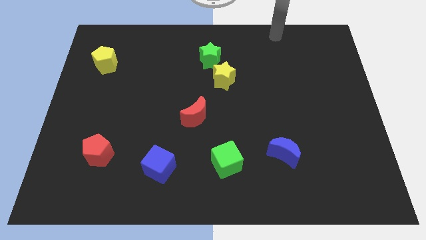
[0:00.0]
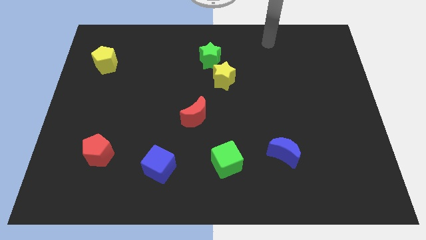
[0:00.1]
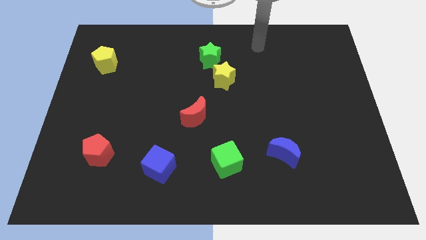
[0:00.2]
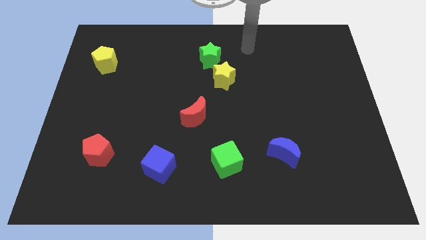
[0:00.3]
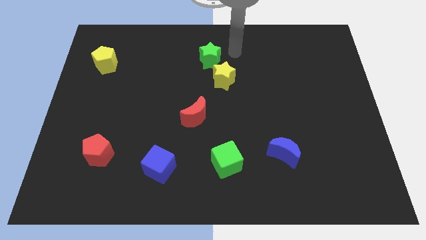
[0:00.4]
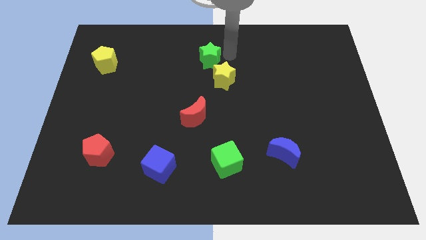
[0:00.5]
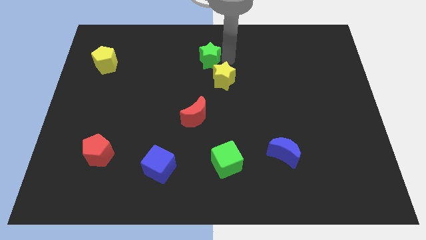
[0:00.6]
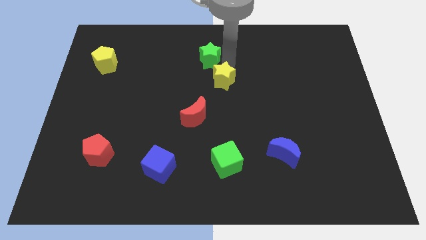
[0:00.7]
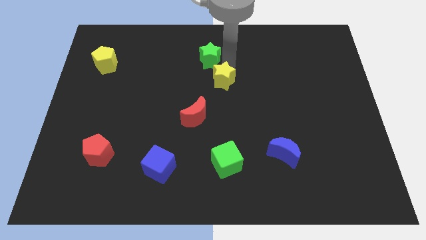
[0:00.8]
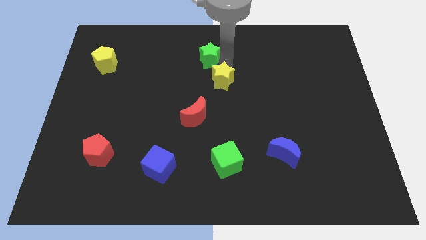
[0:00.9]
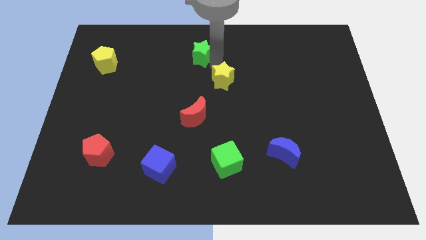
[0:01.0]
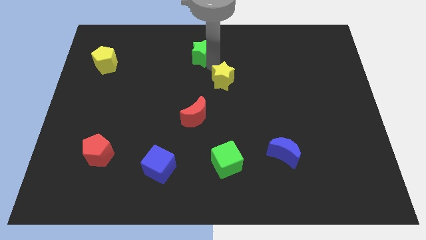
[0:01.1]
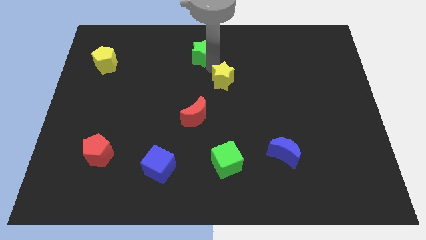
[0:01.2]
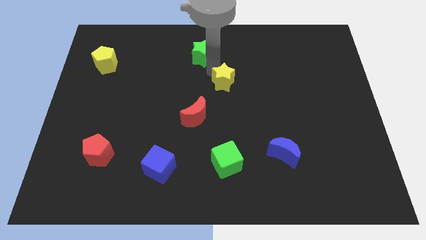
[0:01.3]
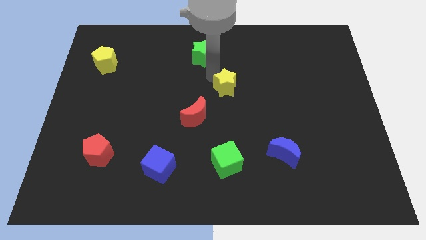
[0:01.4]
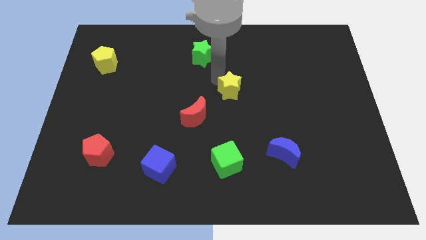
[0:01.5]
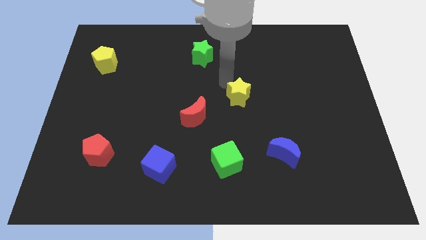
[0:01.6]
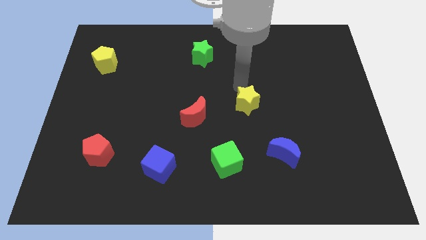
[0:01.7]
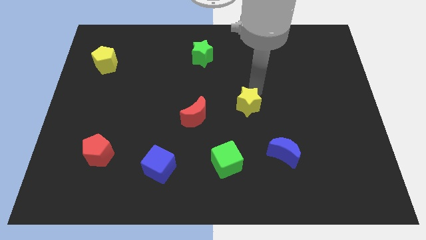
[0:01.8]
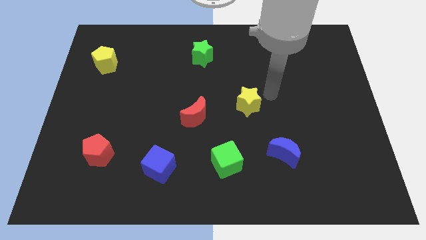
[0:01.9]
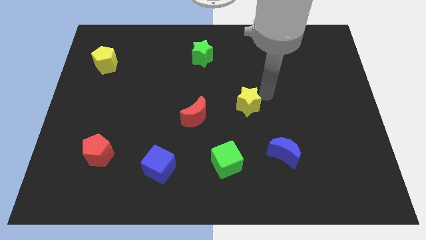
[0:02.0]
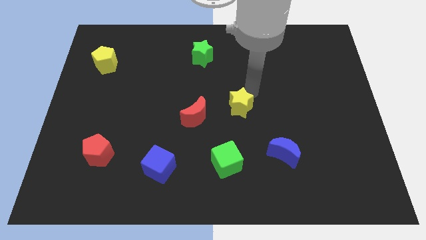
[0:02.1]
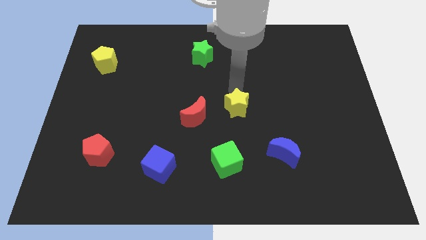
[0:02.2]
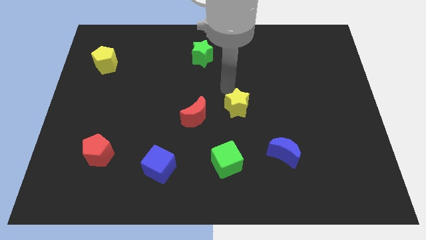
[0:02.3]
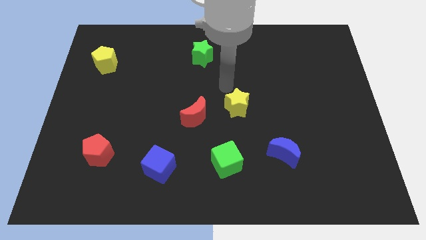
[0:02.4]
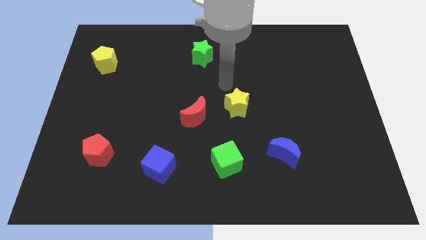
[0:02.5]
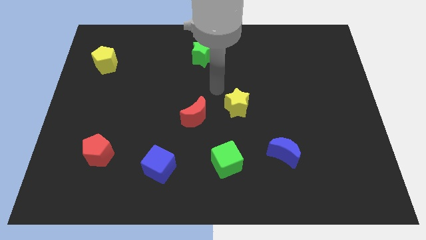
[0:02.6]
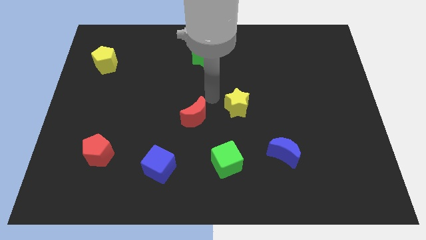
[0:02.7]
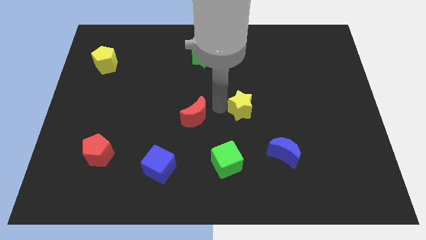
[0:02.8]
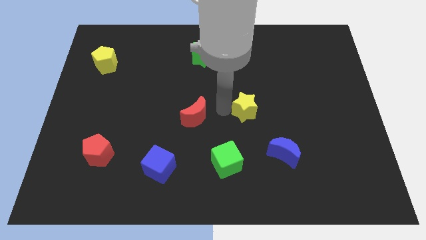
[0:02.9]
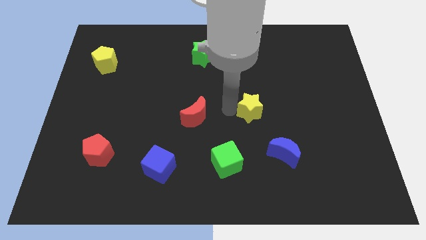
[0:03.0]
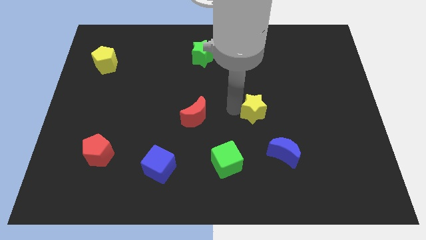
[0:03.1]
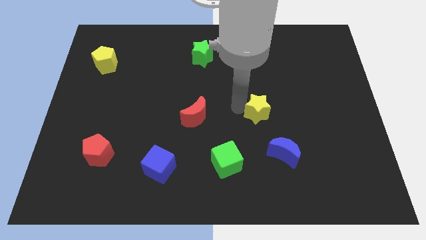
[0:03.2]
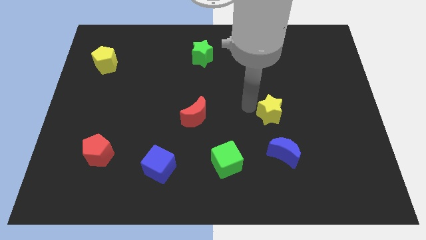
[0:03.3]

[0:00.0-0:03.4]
move the yellow star to the top side of the blue crescent

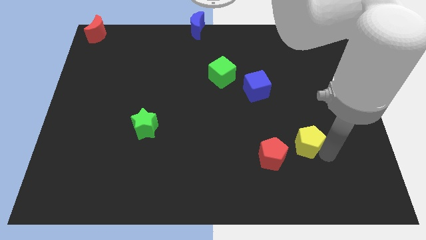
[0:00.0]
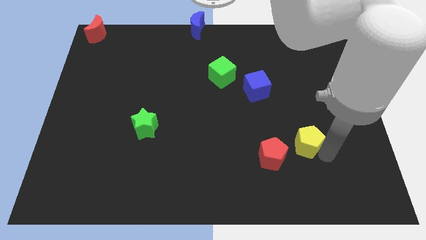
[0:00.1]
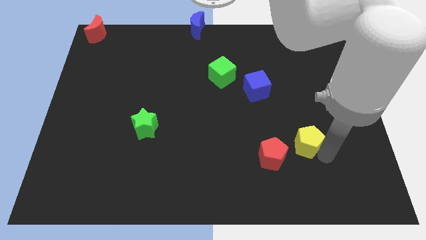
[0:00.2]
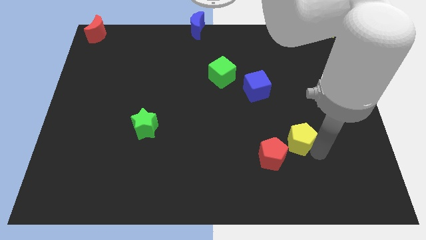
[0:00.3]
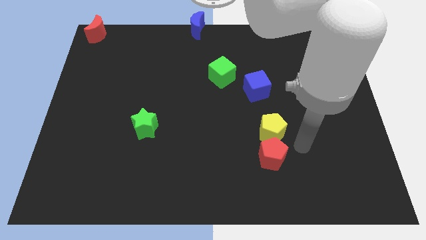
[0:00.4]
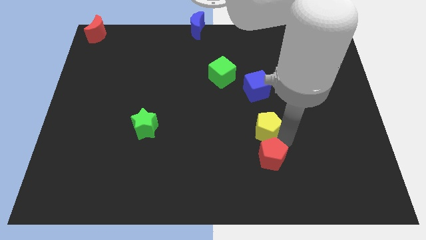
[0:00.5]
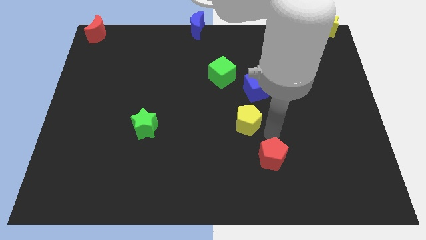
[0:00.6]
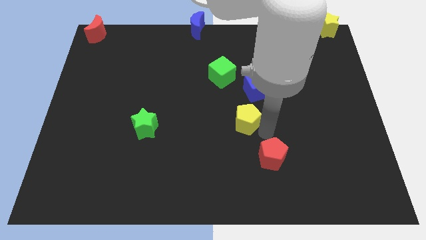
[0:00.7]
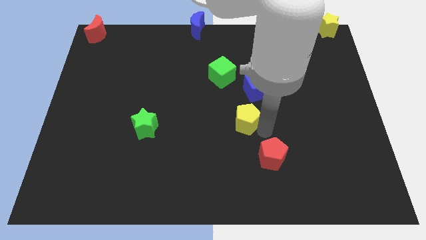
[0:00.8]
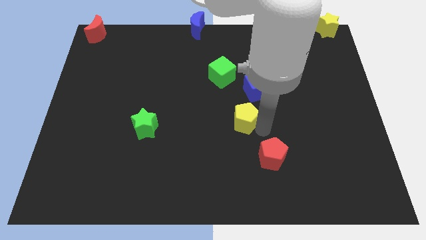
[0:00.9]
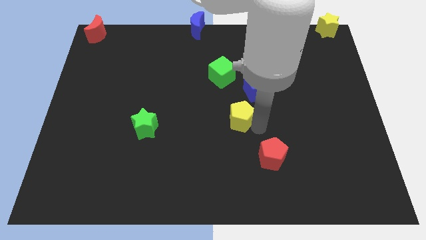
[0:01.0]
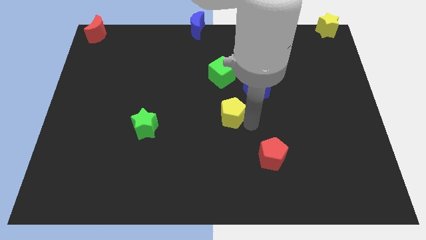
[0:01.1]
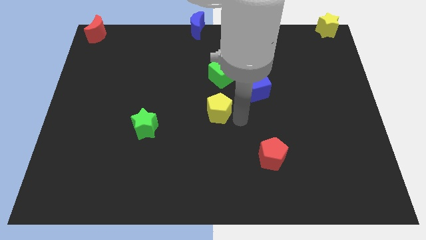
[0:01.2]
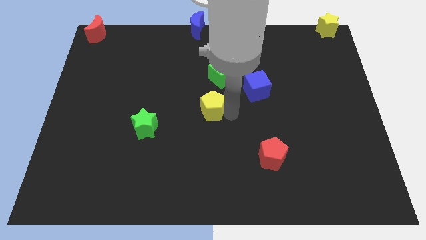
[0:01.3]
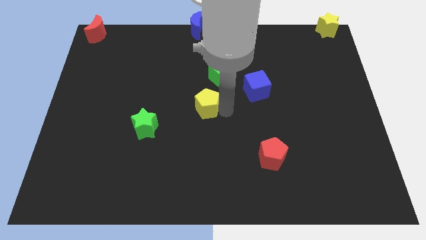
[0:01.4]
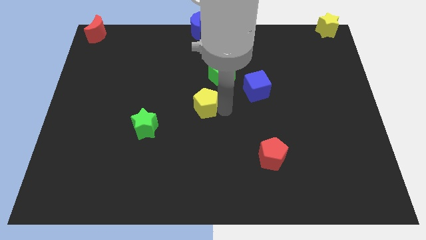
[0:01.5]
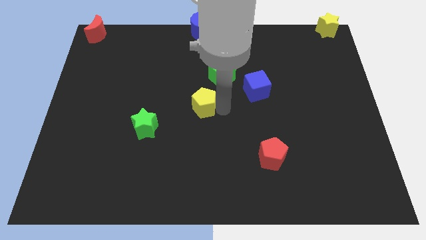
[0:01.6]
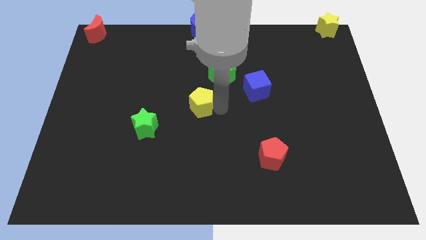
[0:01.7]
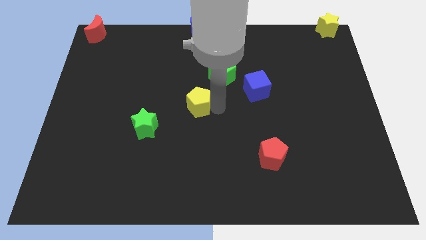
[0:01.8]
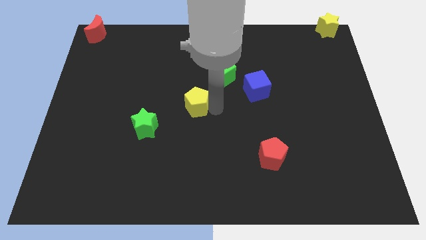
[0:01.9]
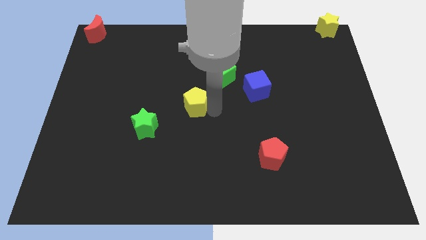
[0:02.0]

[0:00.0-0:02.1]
slide yellow pentagon to the center

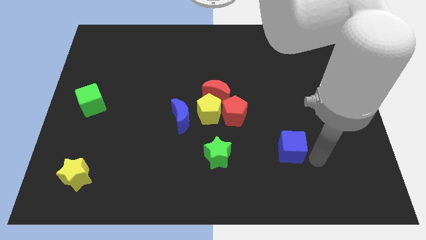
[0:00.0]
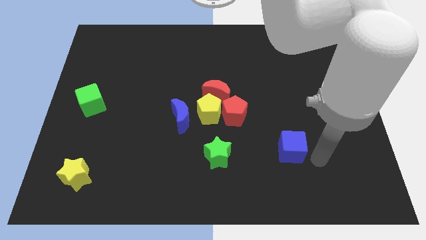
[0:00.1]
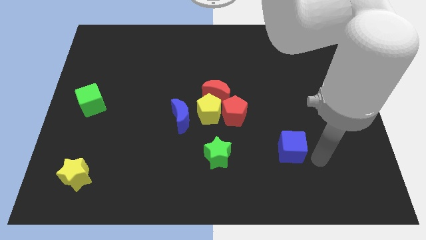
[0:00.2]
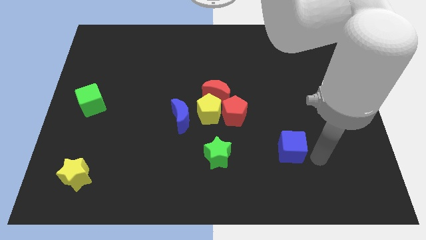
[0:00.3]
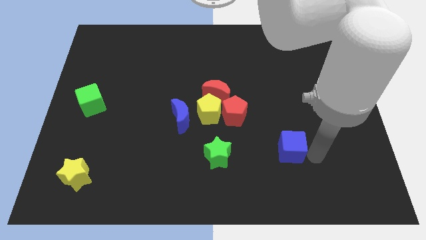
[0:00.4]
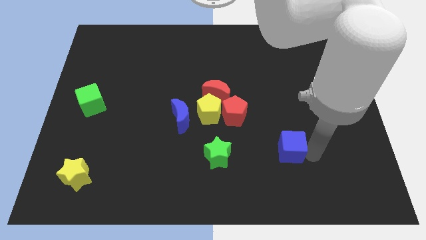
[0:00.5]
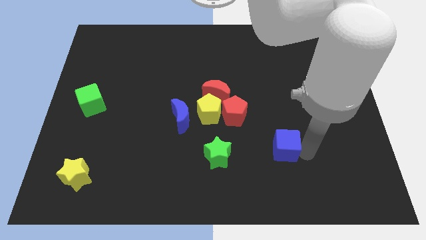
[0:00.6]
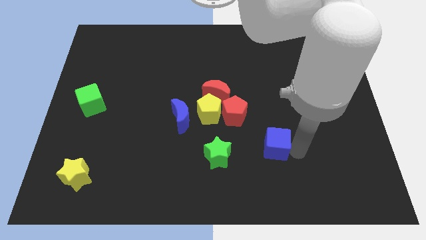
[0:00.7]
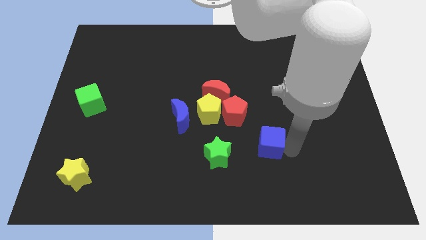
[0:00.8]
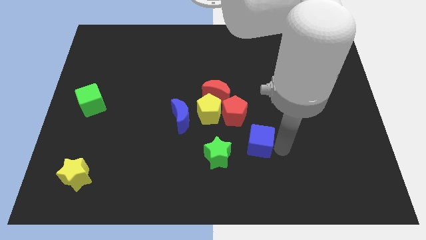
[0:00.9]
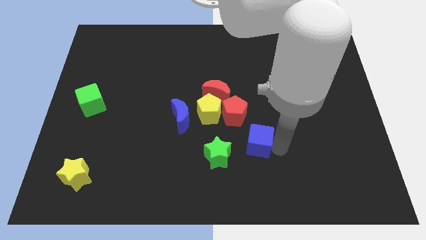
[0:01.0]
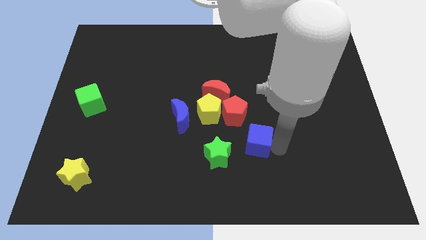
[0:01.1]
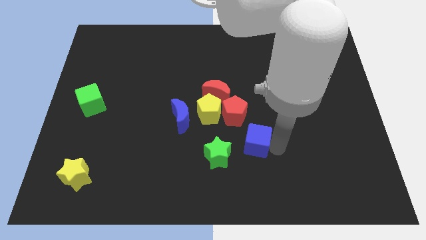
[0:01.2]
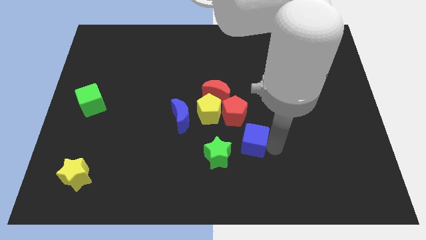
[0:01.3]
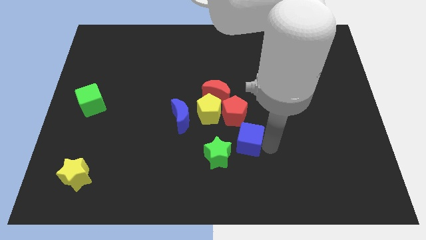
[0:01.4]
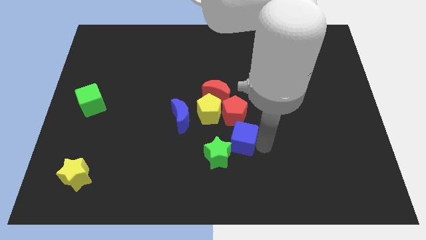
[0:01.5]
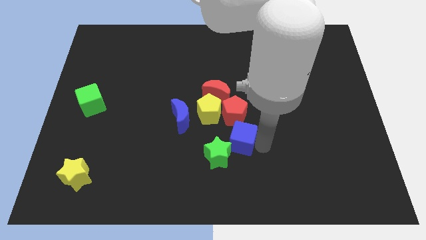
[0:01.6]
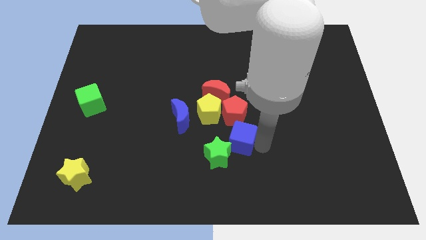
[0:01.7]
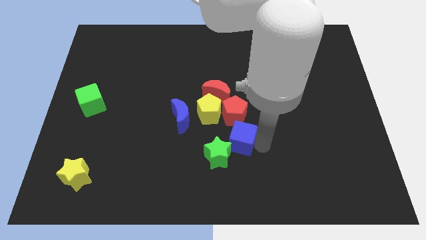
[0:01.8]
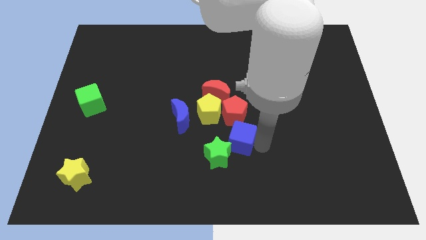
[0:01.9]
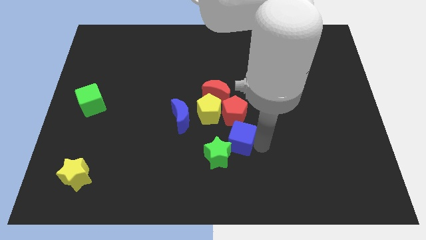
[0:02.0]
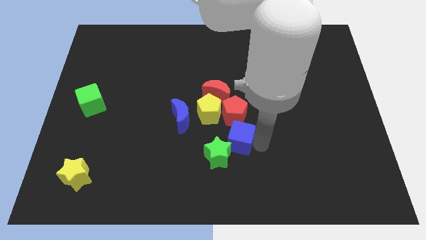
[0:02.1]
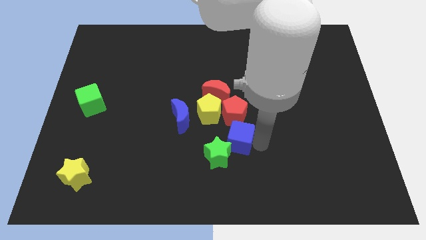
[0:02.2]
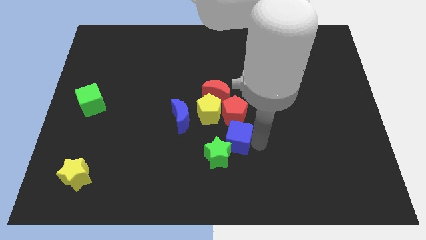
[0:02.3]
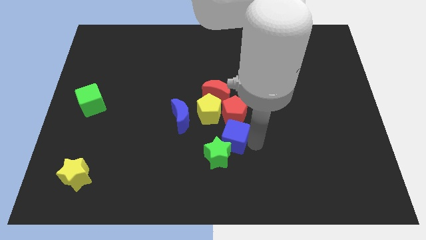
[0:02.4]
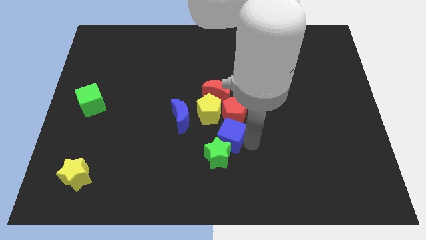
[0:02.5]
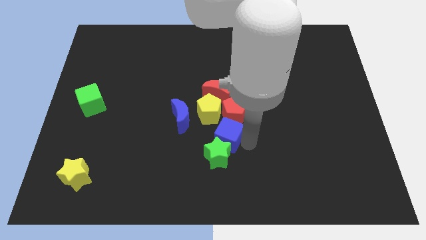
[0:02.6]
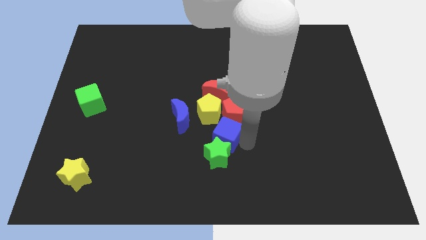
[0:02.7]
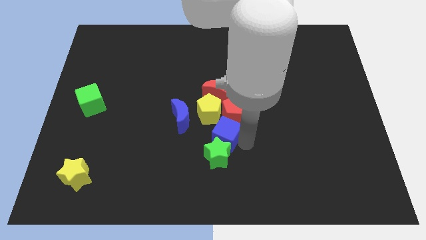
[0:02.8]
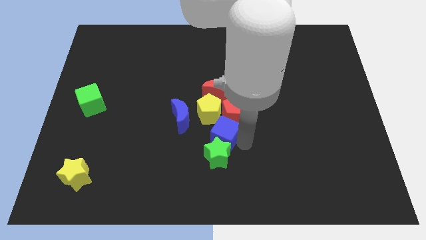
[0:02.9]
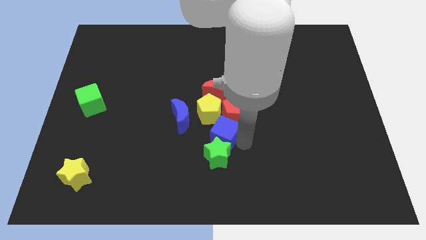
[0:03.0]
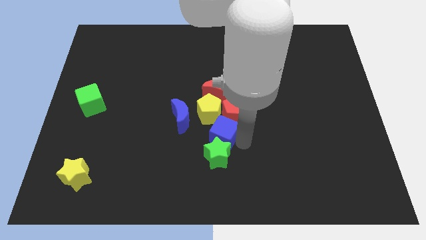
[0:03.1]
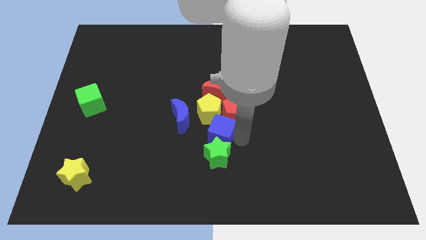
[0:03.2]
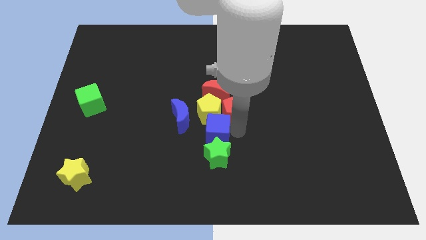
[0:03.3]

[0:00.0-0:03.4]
move the blue cube to the top side of the green star
